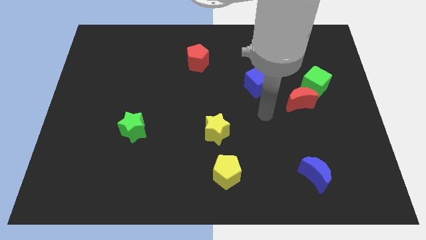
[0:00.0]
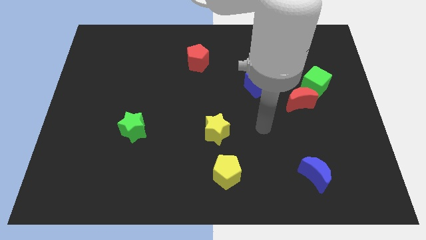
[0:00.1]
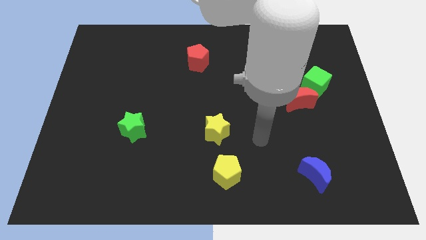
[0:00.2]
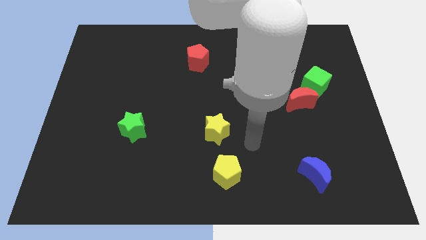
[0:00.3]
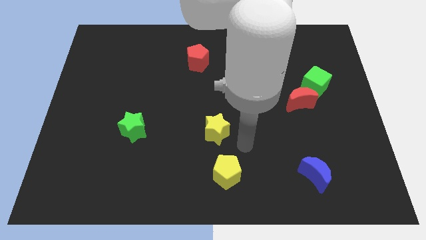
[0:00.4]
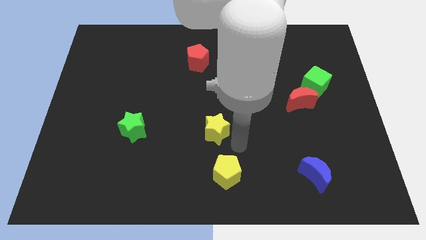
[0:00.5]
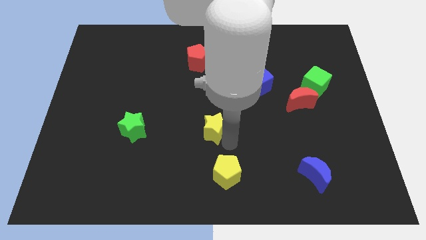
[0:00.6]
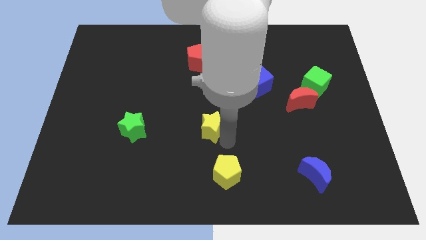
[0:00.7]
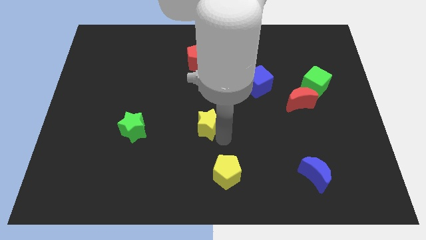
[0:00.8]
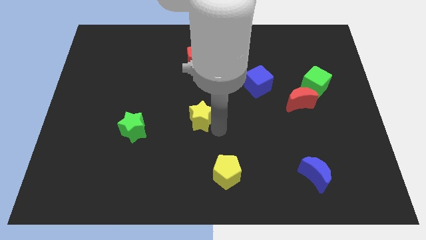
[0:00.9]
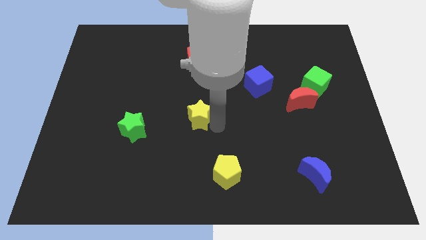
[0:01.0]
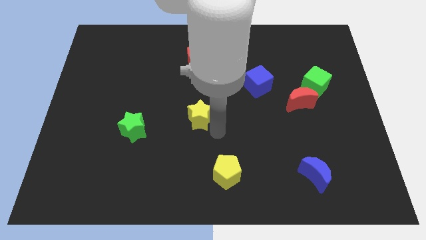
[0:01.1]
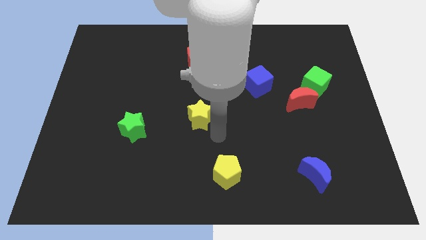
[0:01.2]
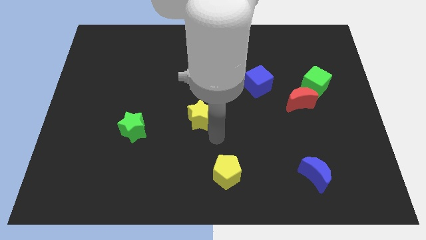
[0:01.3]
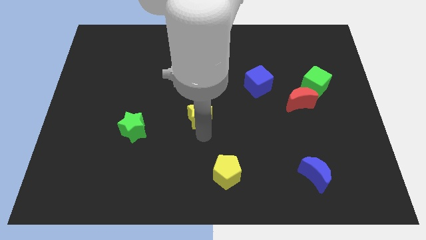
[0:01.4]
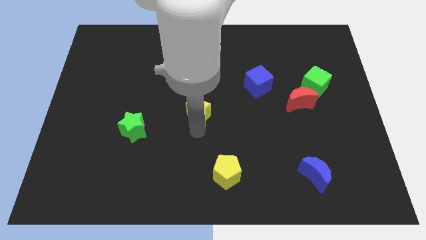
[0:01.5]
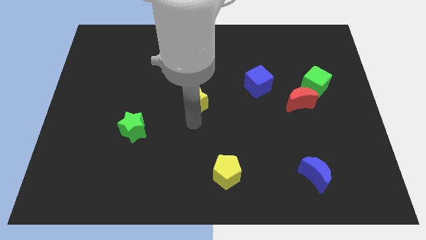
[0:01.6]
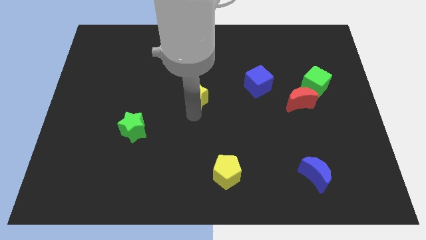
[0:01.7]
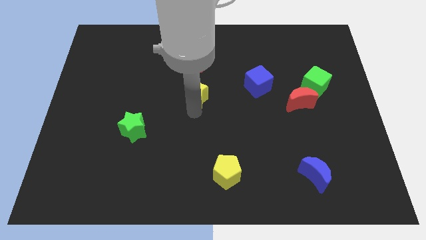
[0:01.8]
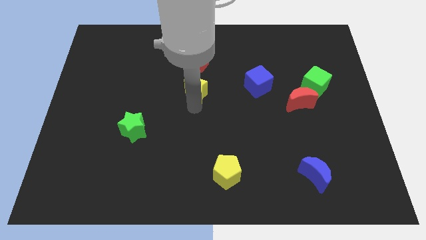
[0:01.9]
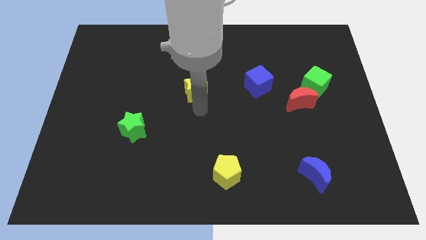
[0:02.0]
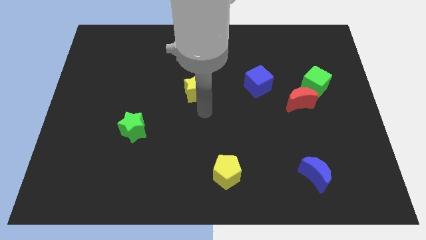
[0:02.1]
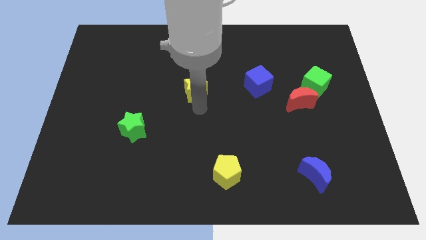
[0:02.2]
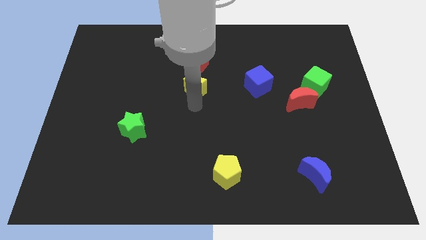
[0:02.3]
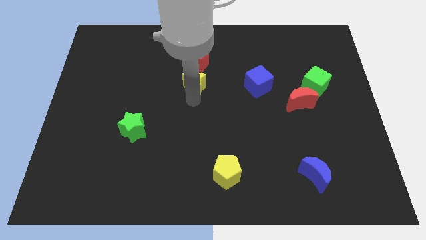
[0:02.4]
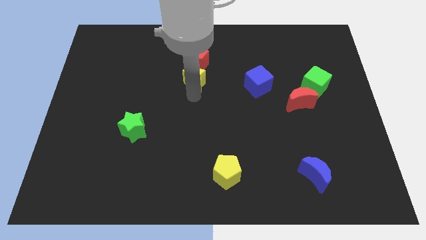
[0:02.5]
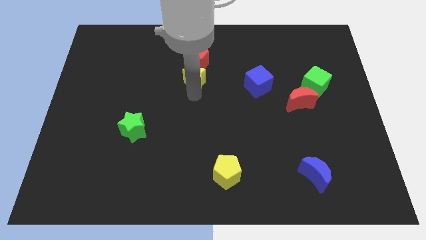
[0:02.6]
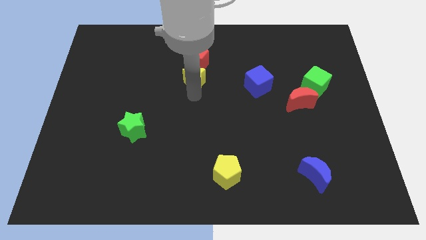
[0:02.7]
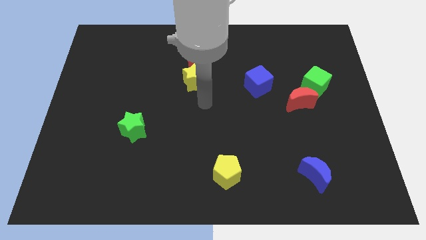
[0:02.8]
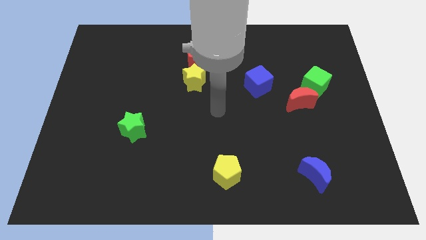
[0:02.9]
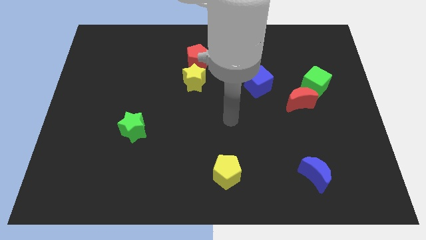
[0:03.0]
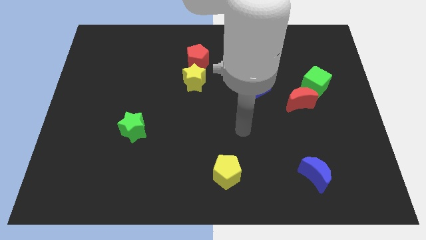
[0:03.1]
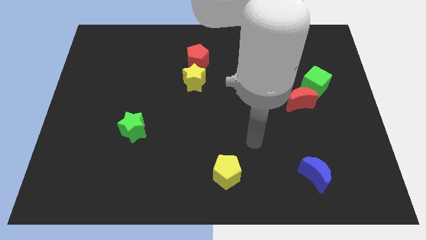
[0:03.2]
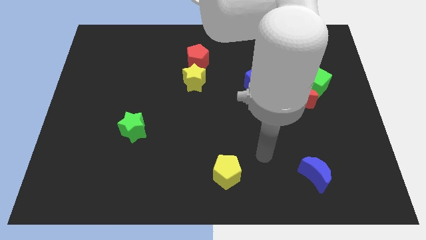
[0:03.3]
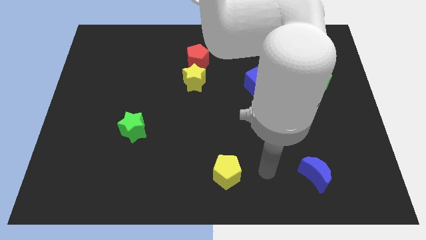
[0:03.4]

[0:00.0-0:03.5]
move the yellow star to the bottom side of the red pentagon

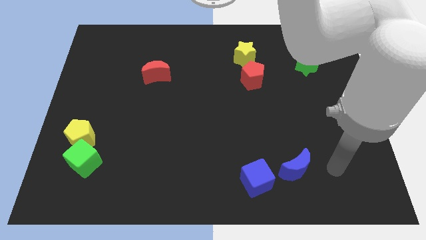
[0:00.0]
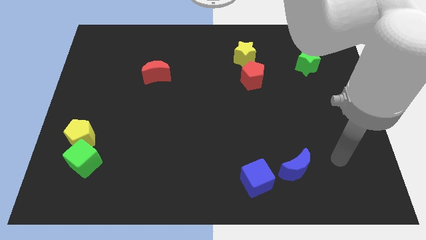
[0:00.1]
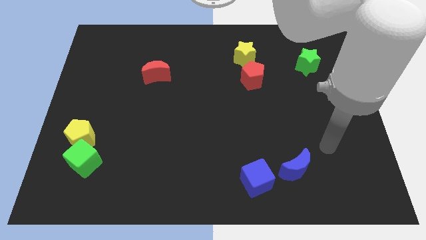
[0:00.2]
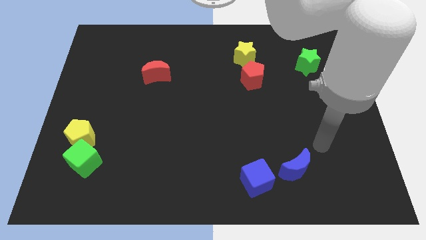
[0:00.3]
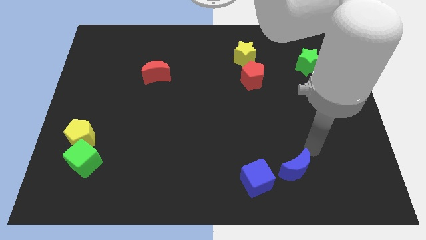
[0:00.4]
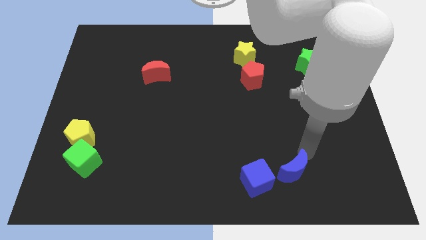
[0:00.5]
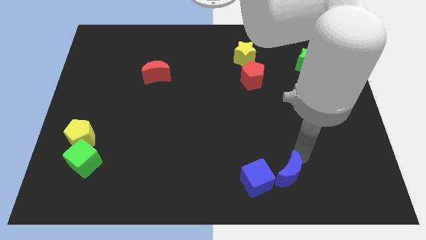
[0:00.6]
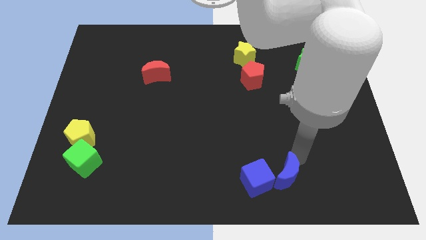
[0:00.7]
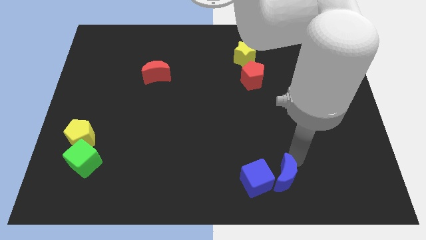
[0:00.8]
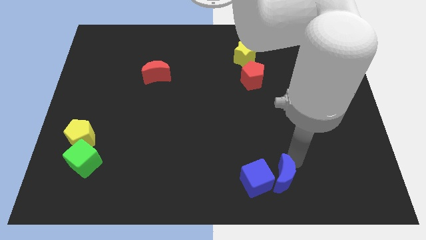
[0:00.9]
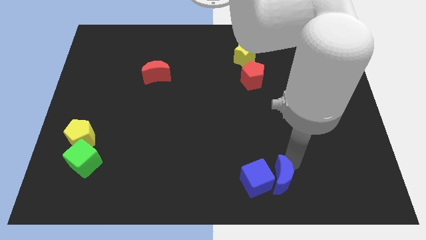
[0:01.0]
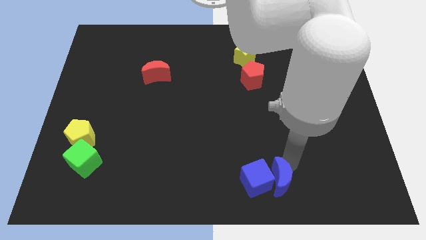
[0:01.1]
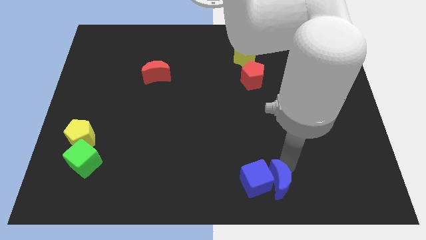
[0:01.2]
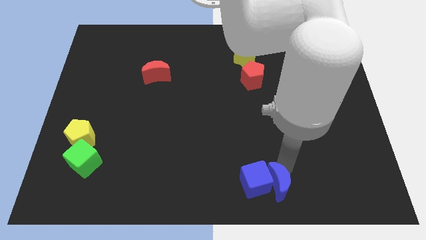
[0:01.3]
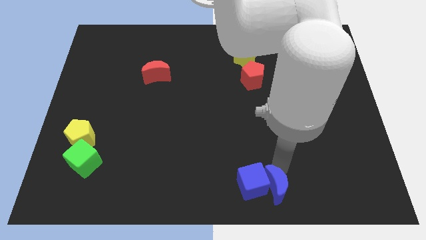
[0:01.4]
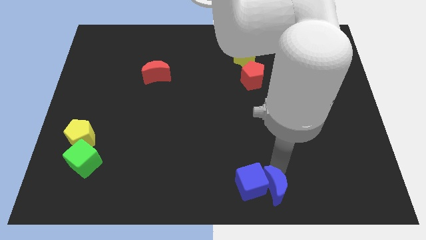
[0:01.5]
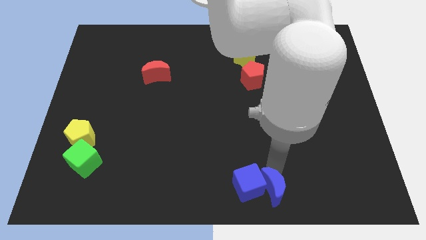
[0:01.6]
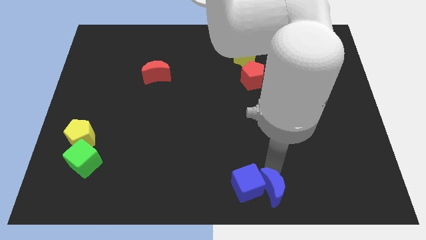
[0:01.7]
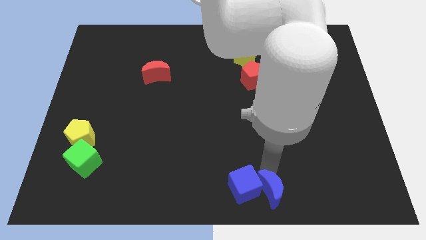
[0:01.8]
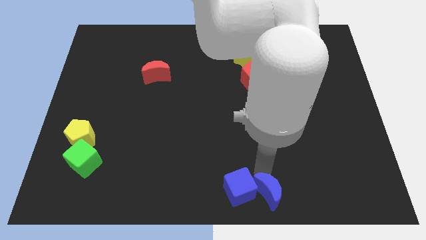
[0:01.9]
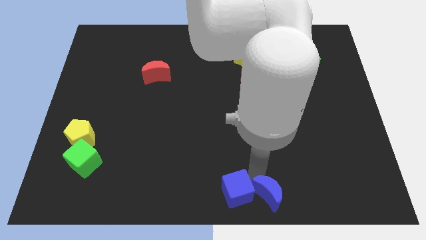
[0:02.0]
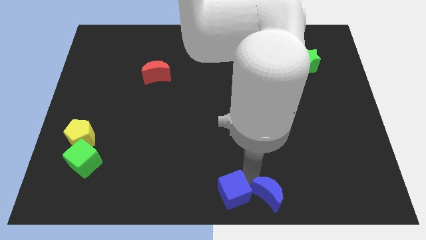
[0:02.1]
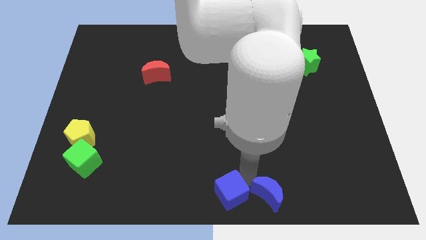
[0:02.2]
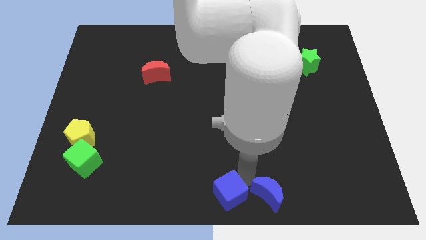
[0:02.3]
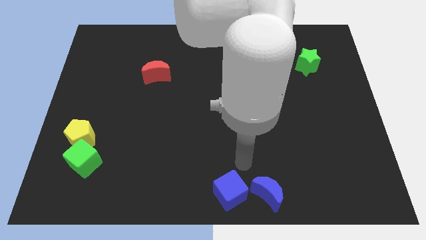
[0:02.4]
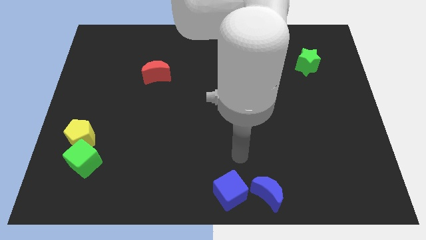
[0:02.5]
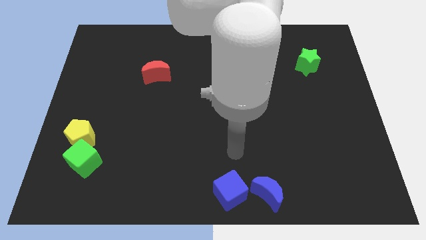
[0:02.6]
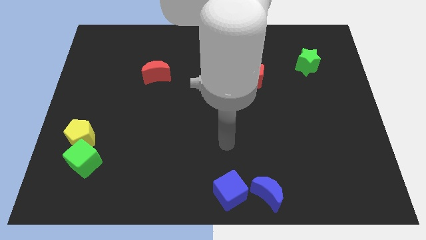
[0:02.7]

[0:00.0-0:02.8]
place the blue cube to the bottom center of the board

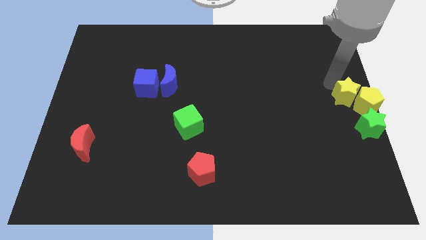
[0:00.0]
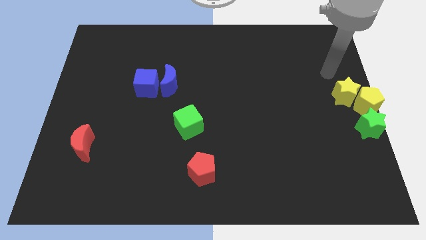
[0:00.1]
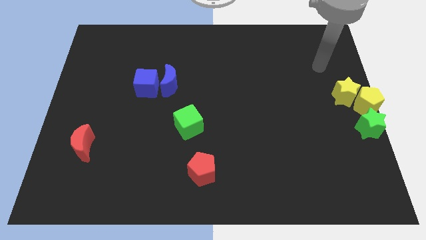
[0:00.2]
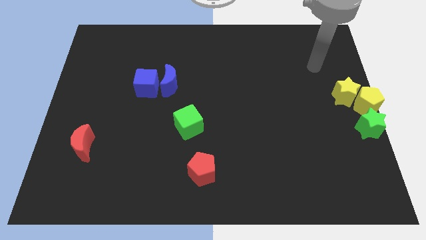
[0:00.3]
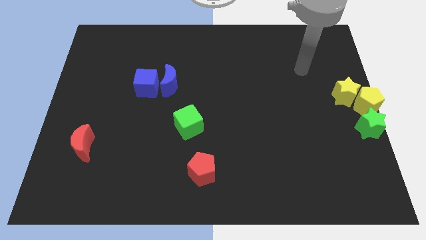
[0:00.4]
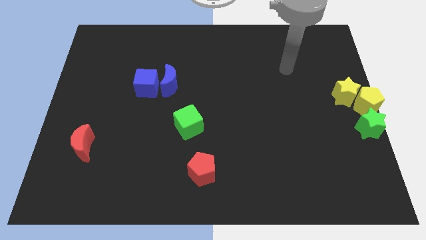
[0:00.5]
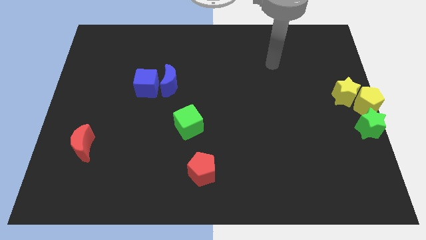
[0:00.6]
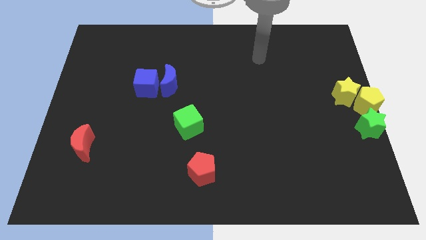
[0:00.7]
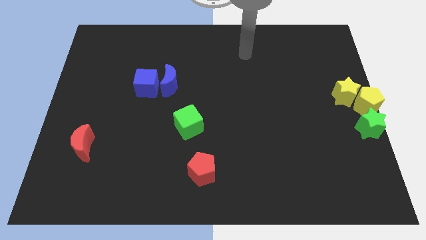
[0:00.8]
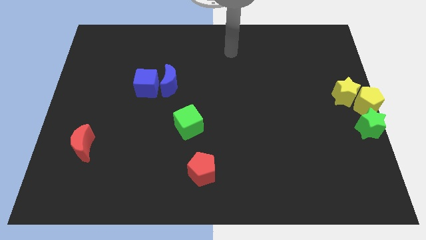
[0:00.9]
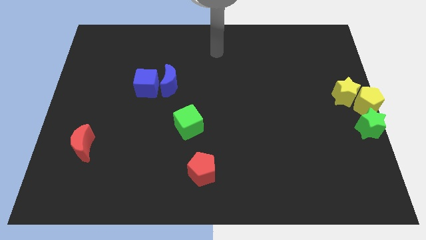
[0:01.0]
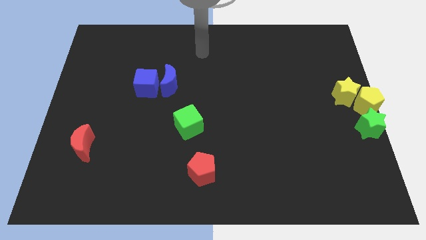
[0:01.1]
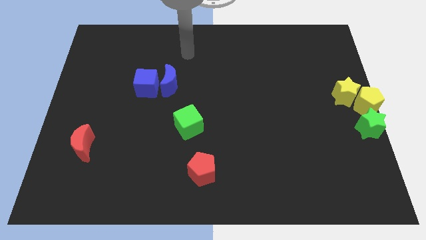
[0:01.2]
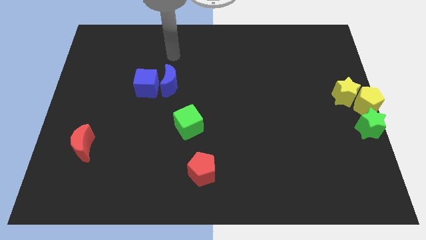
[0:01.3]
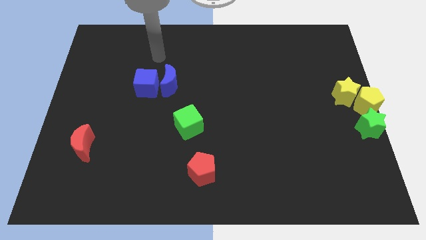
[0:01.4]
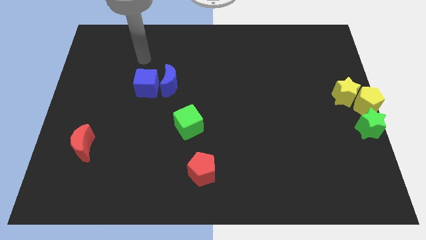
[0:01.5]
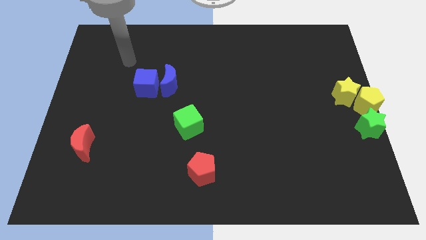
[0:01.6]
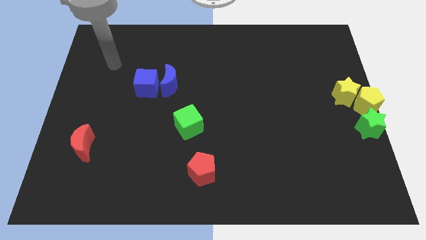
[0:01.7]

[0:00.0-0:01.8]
move your arm away from yellow star

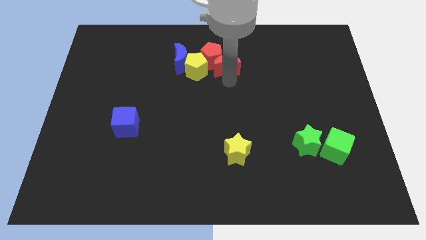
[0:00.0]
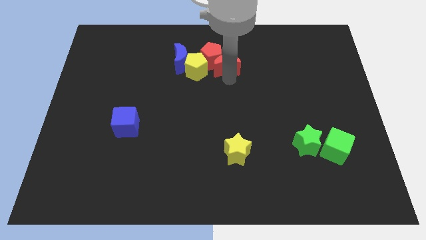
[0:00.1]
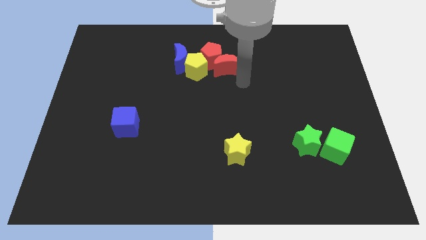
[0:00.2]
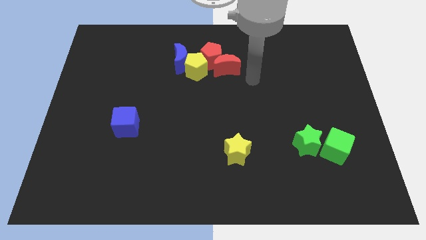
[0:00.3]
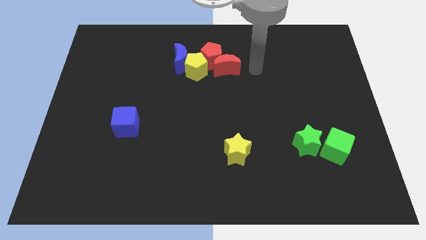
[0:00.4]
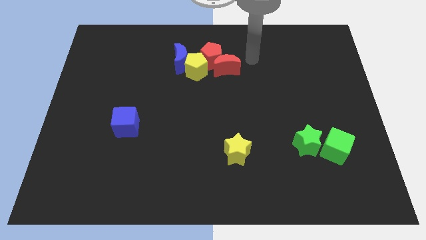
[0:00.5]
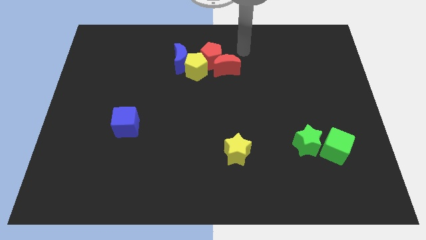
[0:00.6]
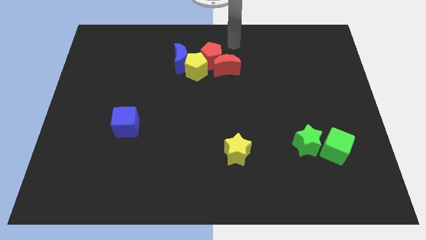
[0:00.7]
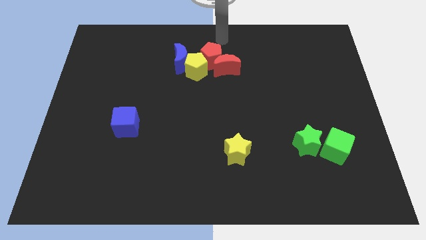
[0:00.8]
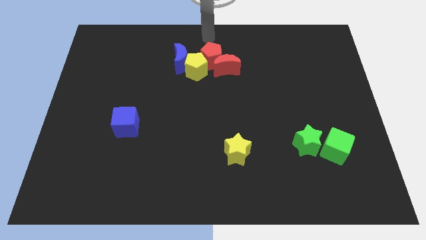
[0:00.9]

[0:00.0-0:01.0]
point your arm at the top of the red pentagon
